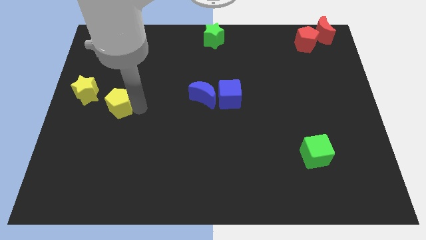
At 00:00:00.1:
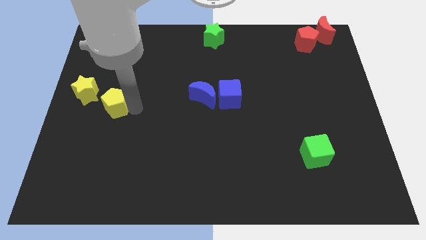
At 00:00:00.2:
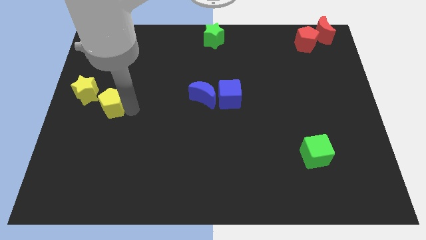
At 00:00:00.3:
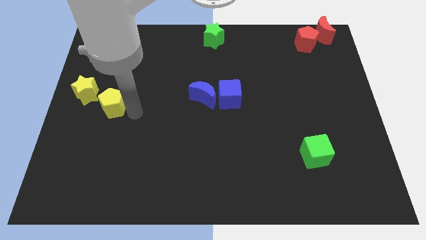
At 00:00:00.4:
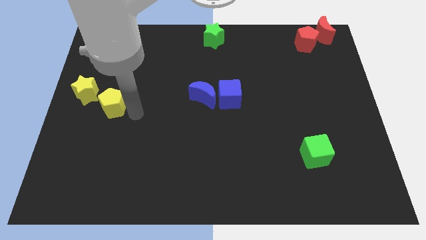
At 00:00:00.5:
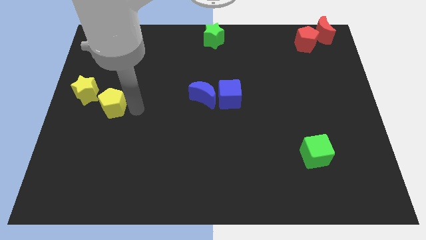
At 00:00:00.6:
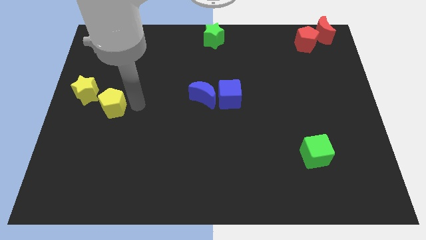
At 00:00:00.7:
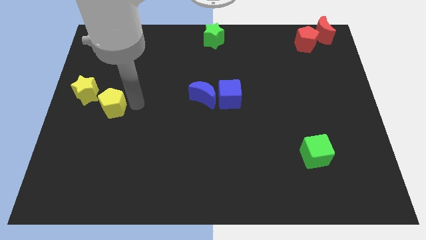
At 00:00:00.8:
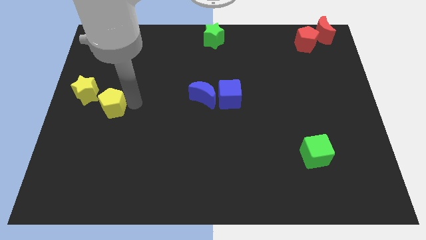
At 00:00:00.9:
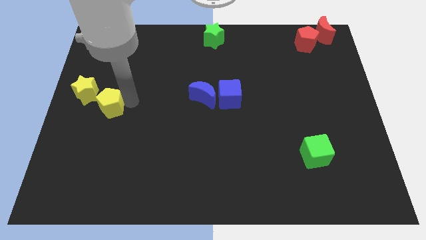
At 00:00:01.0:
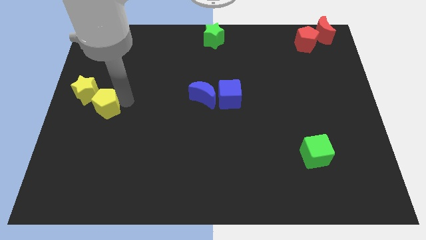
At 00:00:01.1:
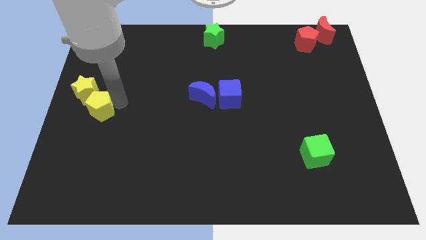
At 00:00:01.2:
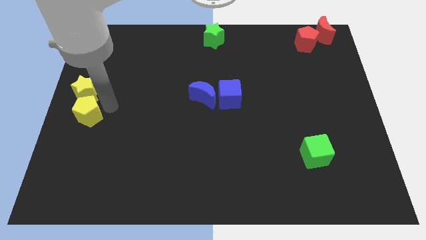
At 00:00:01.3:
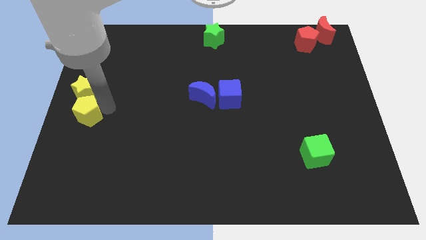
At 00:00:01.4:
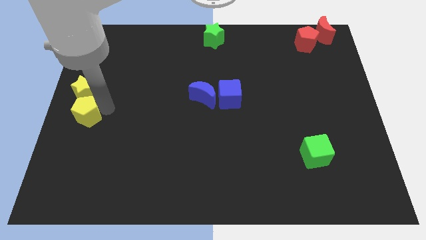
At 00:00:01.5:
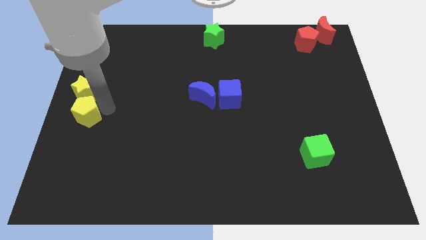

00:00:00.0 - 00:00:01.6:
move the yellow pentagon to the bottom of the yellow star

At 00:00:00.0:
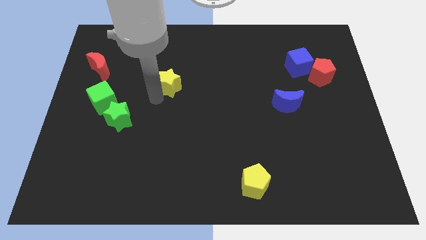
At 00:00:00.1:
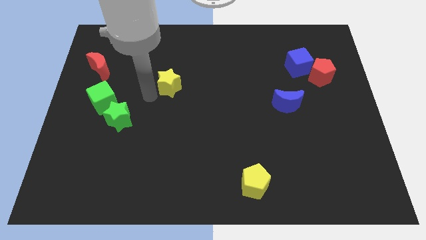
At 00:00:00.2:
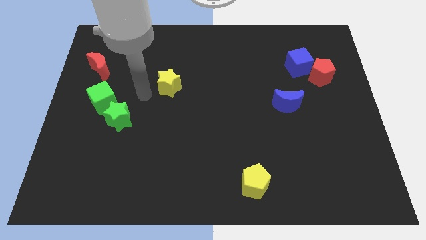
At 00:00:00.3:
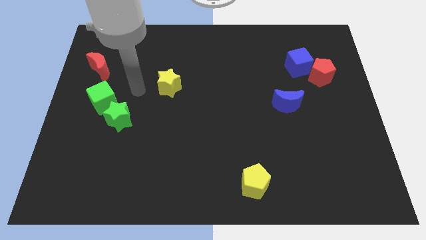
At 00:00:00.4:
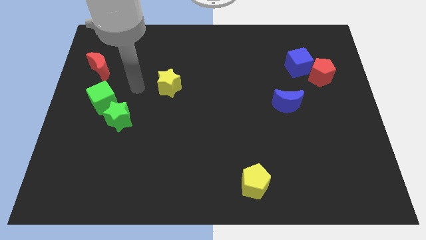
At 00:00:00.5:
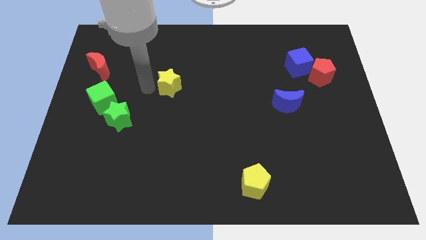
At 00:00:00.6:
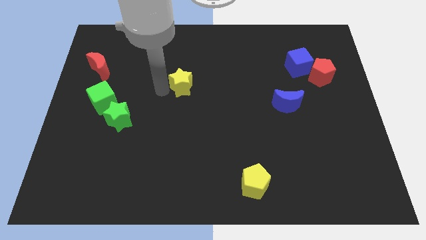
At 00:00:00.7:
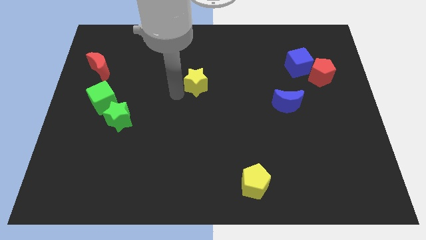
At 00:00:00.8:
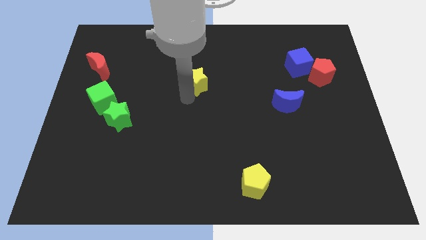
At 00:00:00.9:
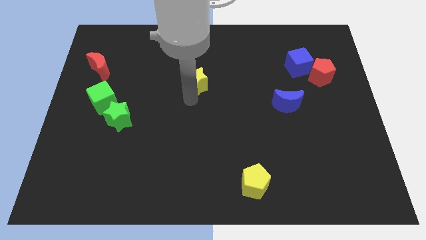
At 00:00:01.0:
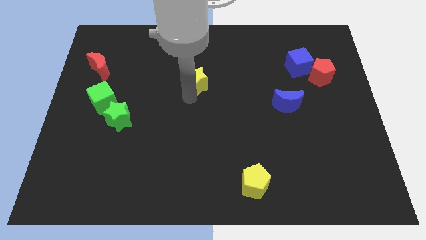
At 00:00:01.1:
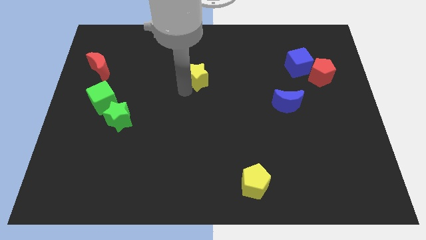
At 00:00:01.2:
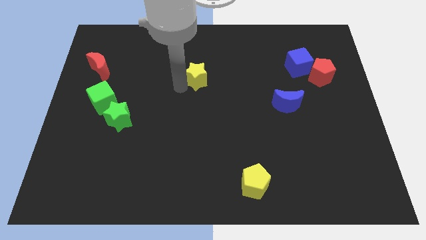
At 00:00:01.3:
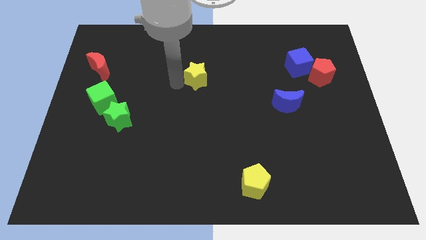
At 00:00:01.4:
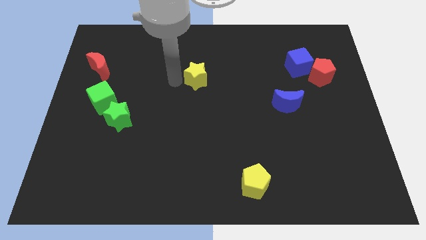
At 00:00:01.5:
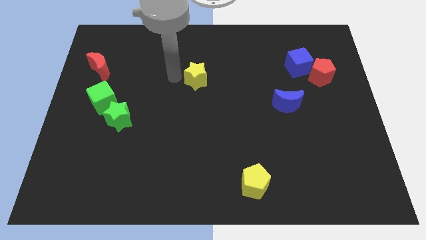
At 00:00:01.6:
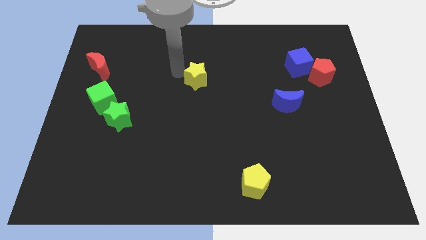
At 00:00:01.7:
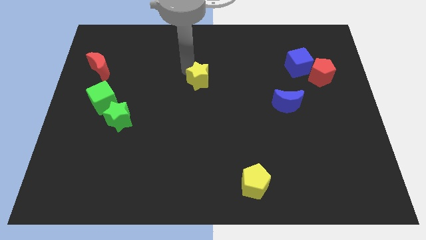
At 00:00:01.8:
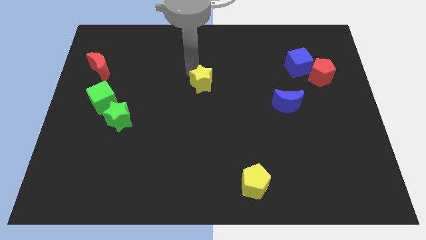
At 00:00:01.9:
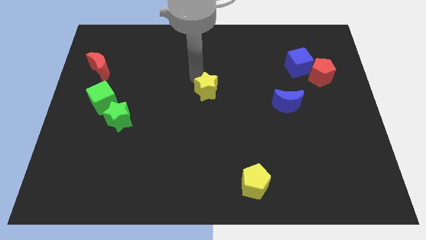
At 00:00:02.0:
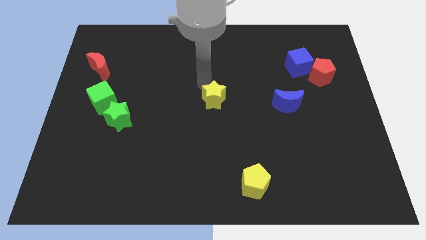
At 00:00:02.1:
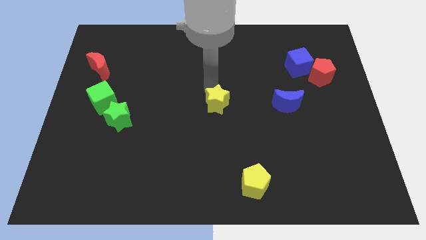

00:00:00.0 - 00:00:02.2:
place yellow star at the center of the board

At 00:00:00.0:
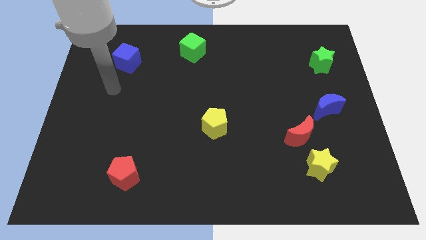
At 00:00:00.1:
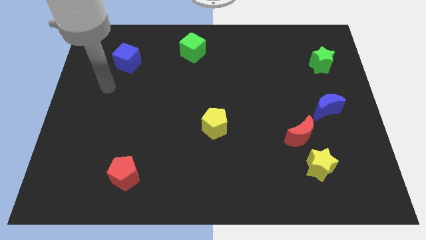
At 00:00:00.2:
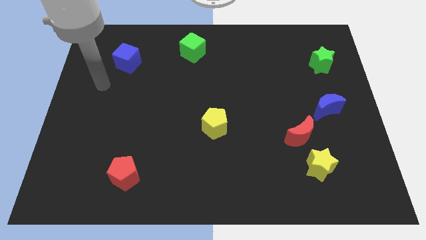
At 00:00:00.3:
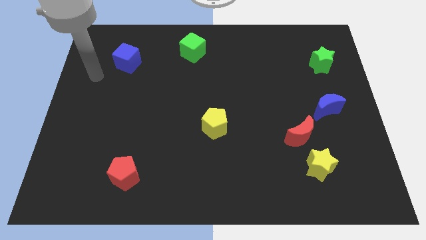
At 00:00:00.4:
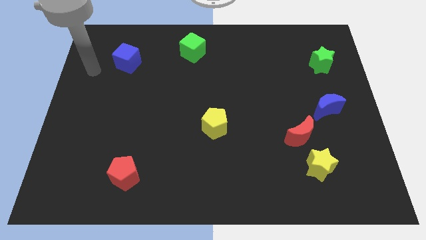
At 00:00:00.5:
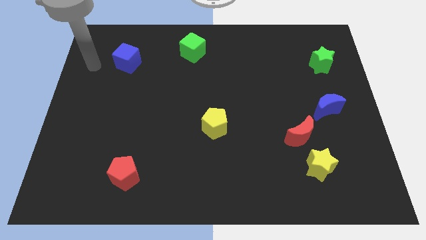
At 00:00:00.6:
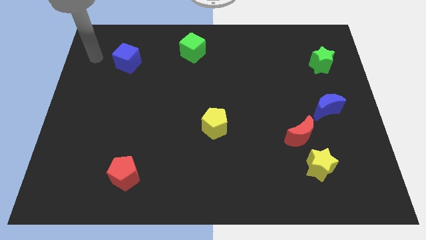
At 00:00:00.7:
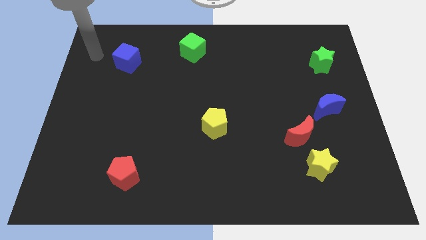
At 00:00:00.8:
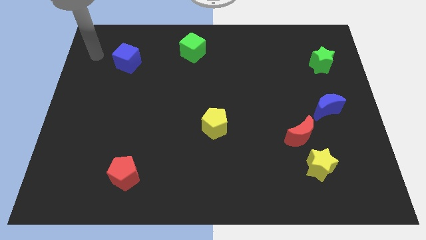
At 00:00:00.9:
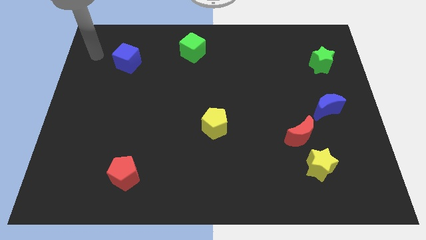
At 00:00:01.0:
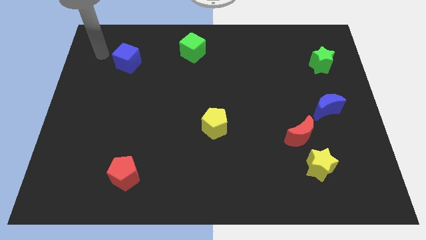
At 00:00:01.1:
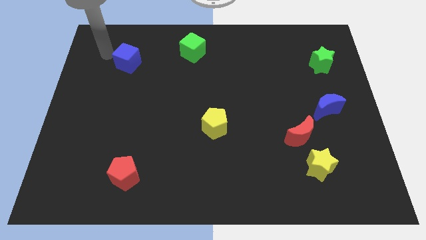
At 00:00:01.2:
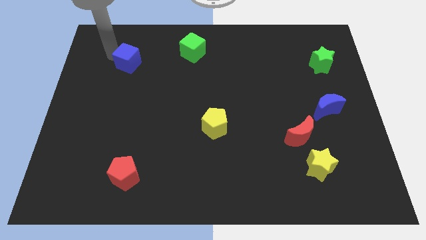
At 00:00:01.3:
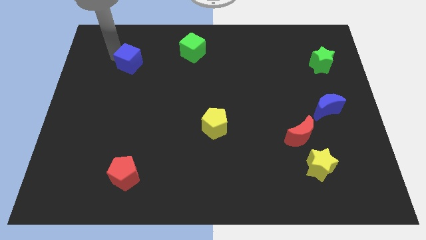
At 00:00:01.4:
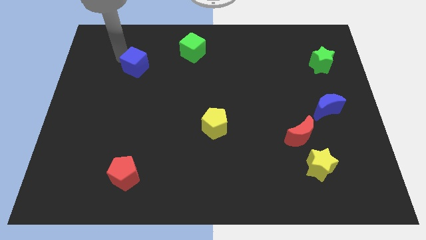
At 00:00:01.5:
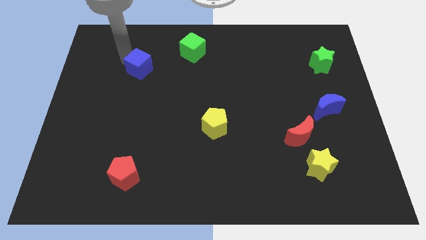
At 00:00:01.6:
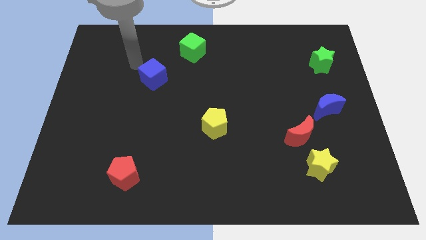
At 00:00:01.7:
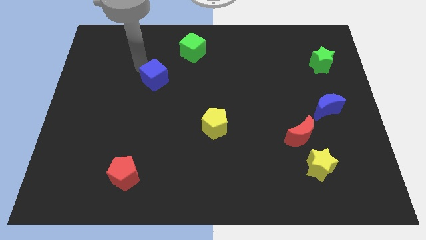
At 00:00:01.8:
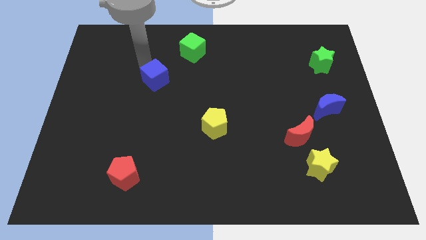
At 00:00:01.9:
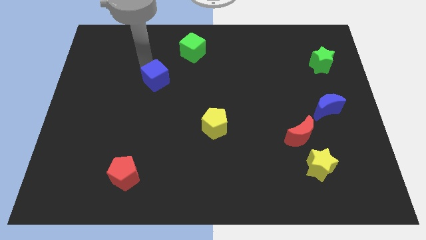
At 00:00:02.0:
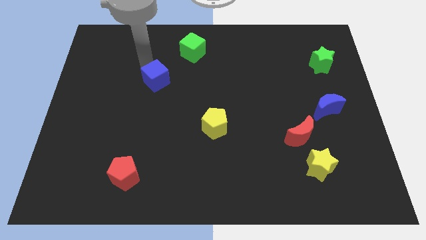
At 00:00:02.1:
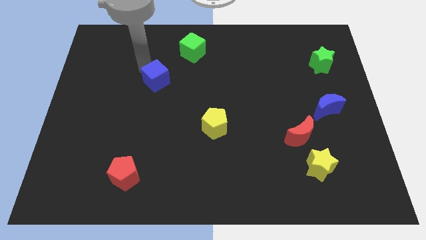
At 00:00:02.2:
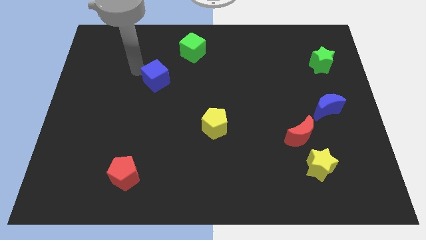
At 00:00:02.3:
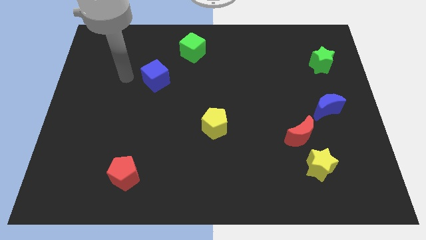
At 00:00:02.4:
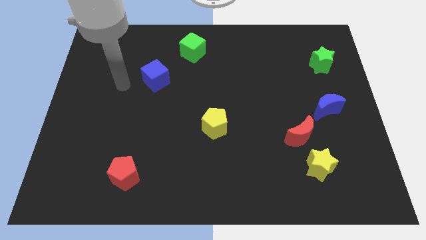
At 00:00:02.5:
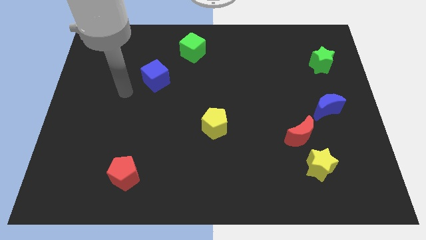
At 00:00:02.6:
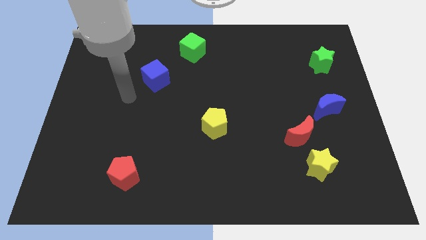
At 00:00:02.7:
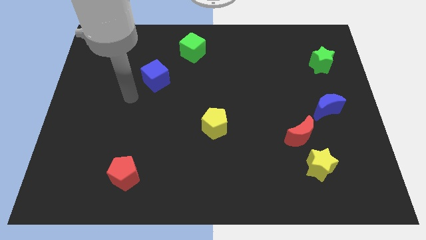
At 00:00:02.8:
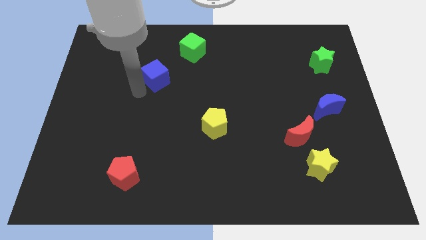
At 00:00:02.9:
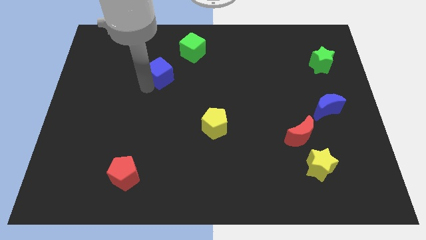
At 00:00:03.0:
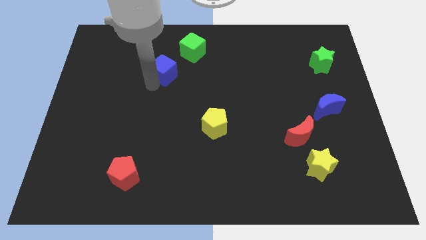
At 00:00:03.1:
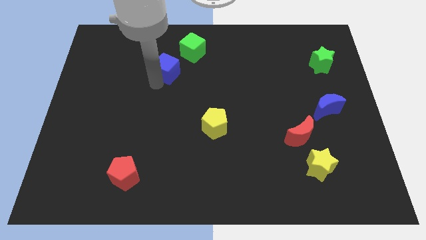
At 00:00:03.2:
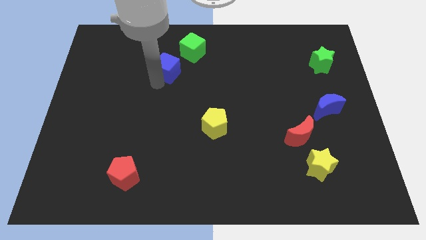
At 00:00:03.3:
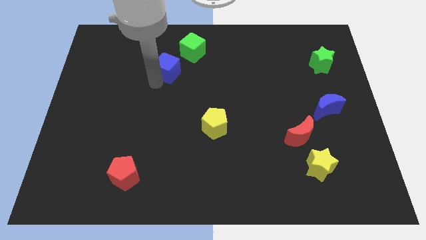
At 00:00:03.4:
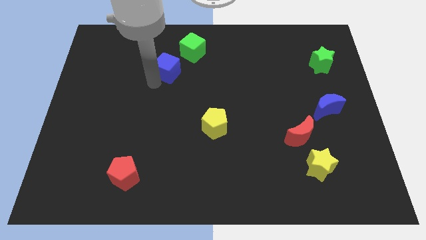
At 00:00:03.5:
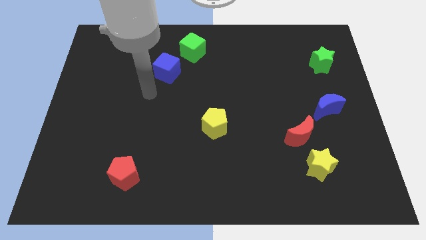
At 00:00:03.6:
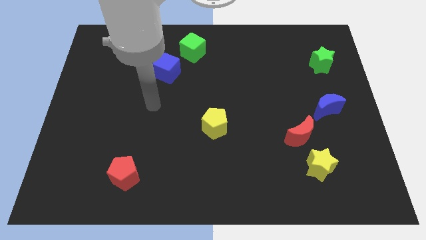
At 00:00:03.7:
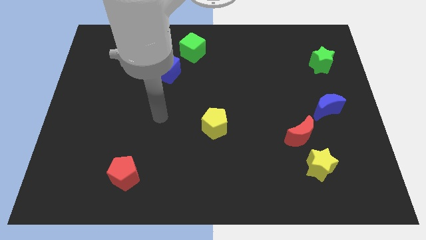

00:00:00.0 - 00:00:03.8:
place the blue cube below the green cube

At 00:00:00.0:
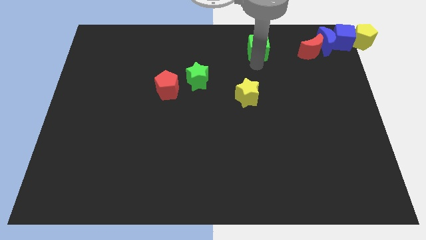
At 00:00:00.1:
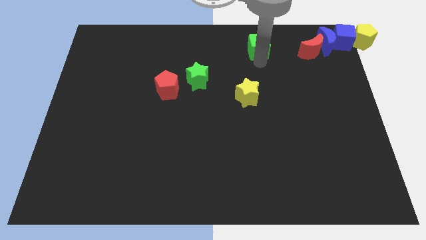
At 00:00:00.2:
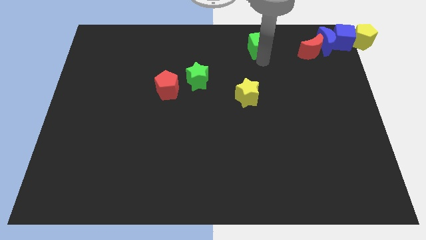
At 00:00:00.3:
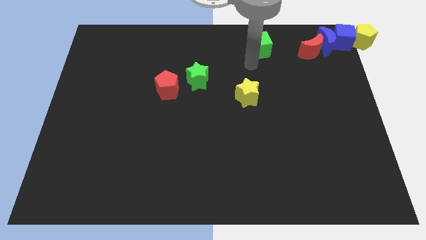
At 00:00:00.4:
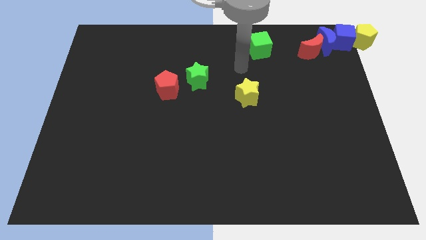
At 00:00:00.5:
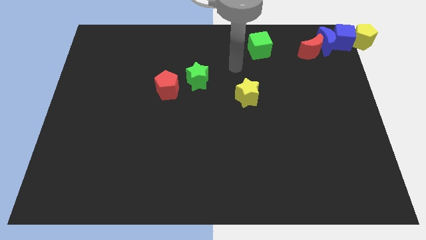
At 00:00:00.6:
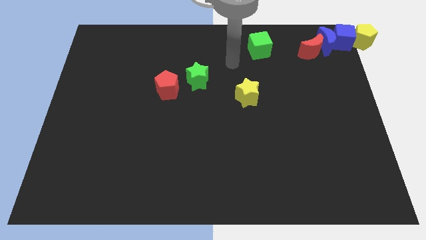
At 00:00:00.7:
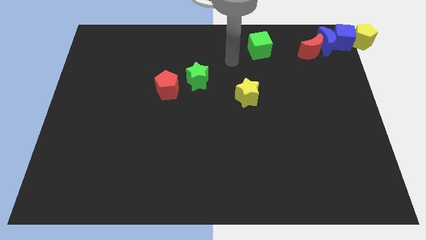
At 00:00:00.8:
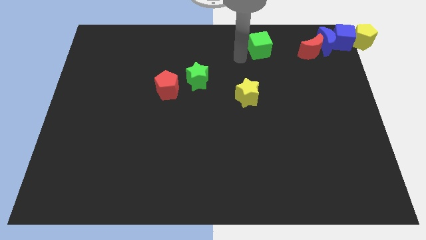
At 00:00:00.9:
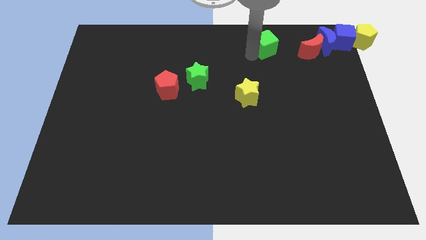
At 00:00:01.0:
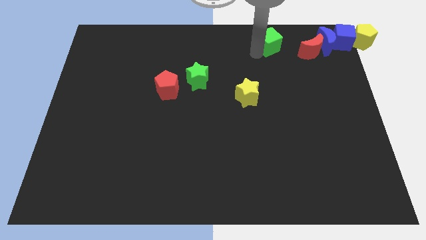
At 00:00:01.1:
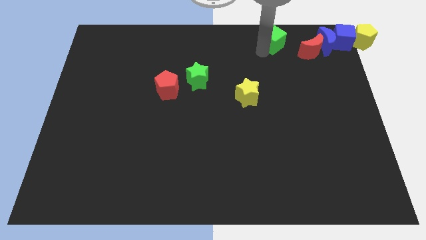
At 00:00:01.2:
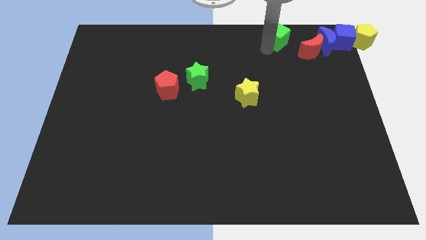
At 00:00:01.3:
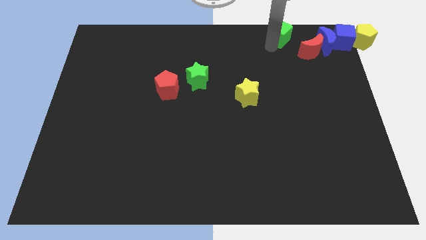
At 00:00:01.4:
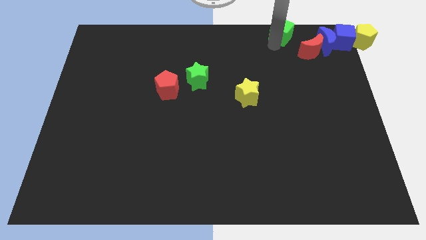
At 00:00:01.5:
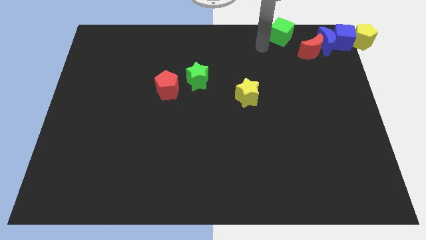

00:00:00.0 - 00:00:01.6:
push the green cube towards the top right
